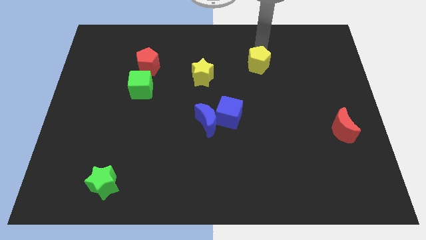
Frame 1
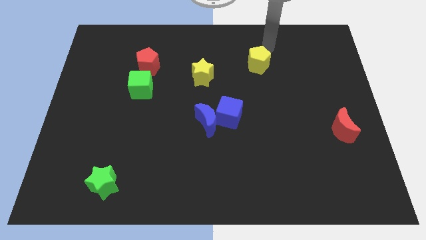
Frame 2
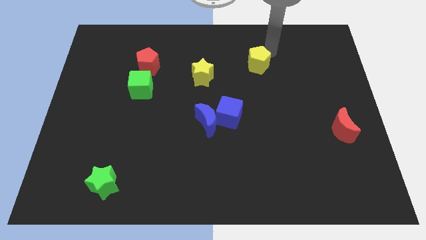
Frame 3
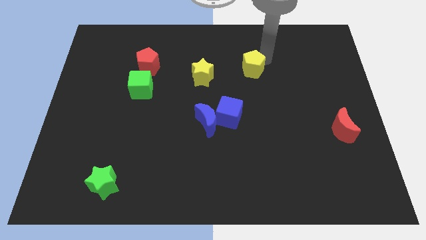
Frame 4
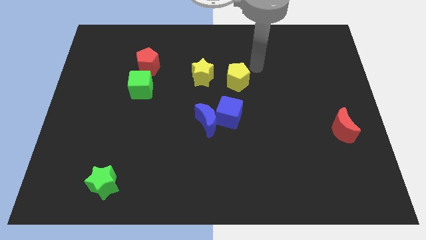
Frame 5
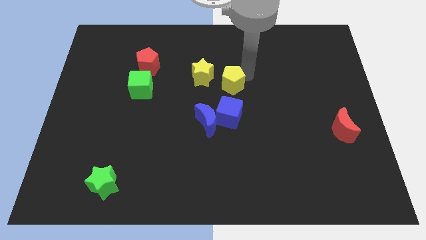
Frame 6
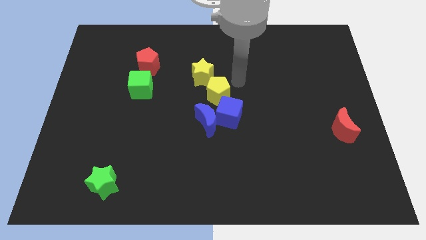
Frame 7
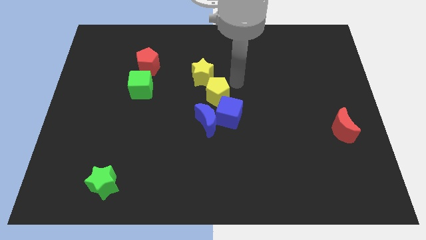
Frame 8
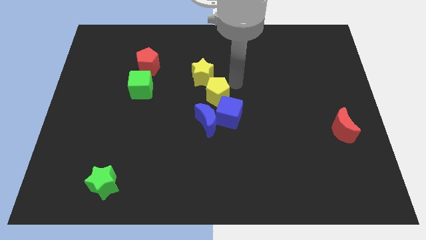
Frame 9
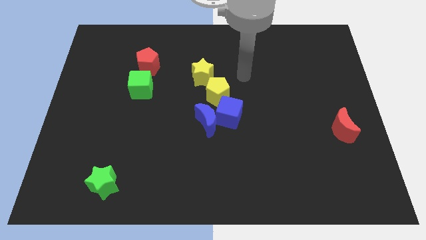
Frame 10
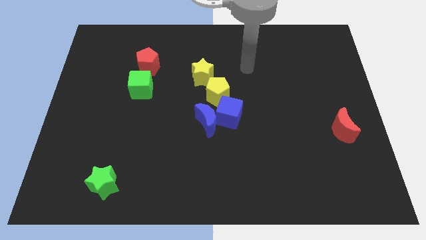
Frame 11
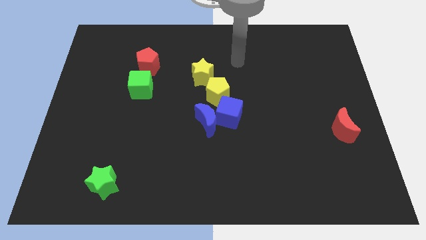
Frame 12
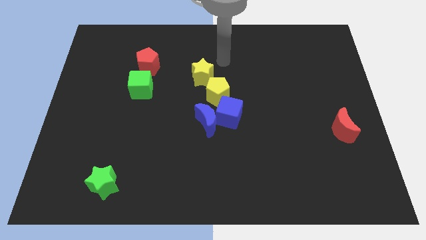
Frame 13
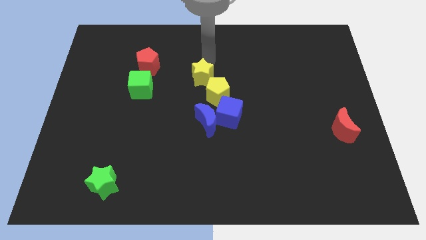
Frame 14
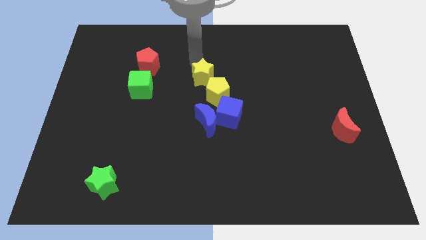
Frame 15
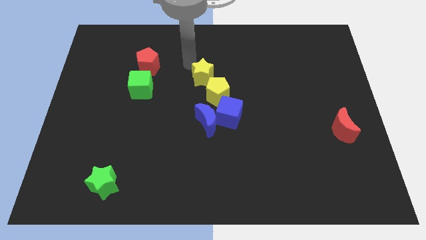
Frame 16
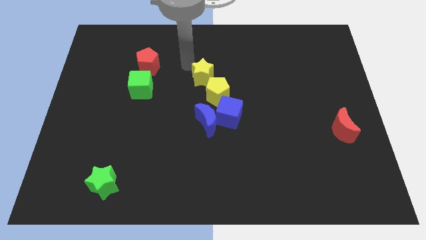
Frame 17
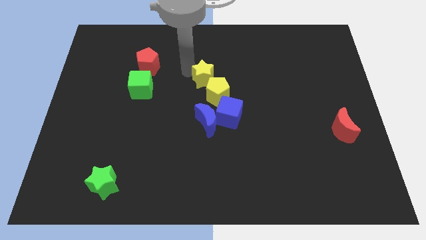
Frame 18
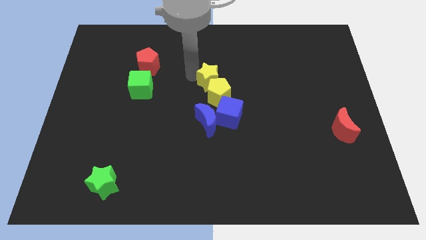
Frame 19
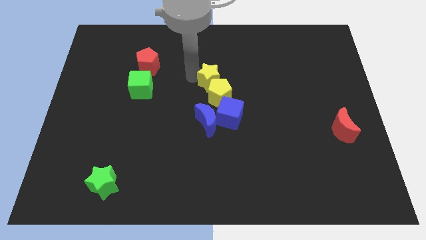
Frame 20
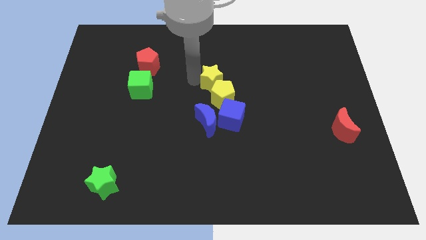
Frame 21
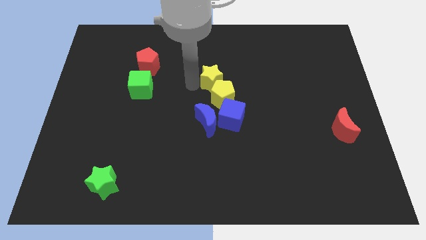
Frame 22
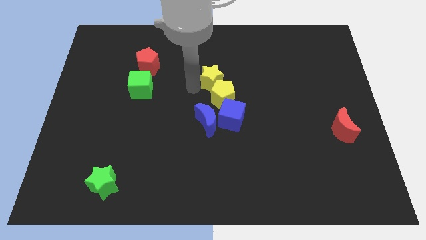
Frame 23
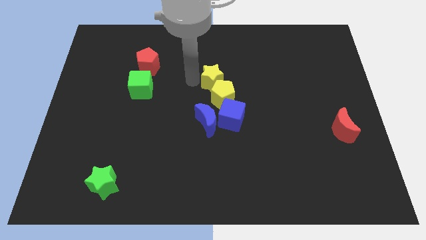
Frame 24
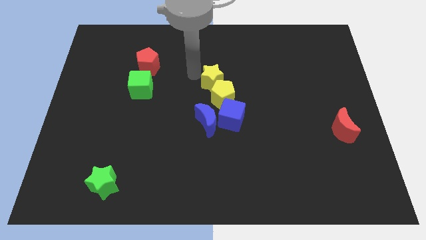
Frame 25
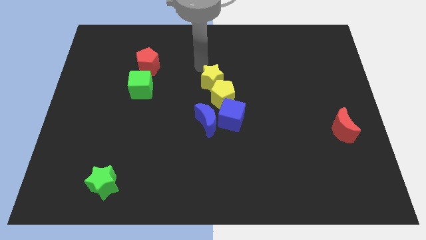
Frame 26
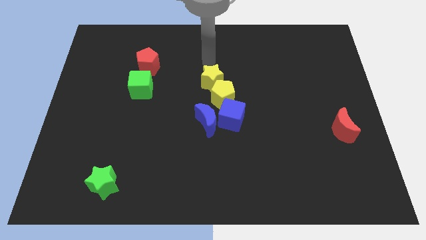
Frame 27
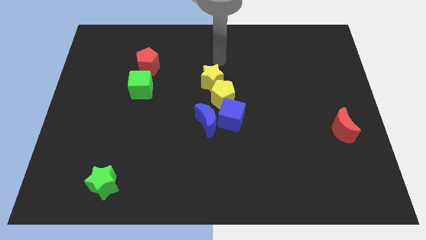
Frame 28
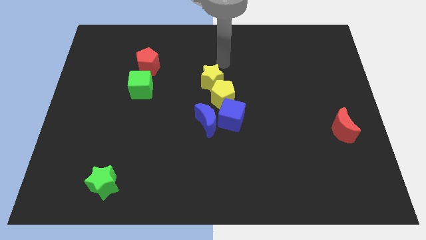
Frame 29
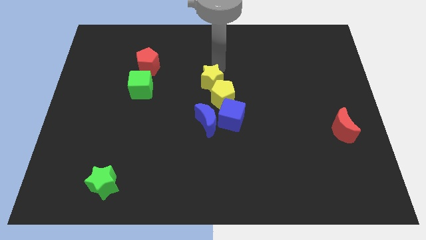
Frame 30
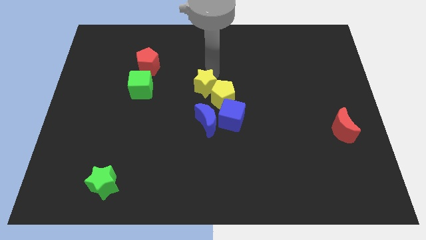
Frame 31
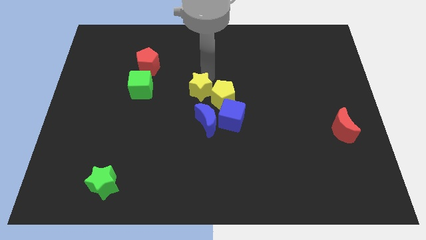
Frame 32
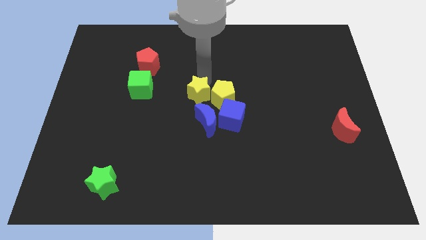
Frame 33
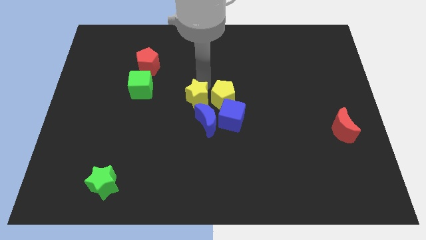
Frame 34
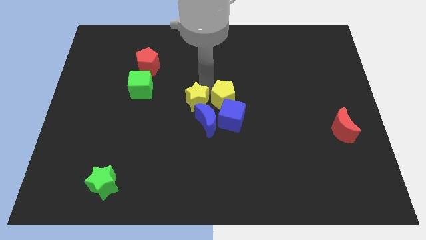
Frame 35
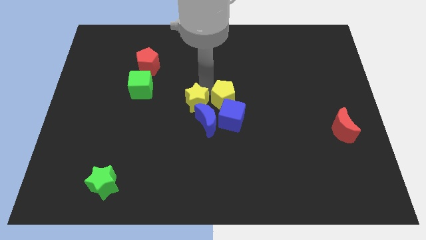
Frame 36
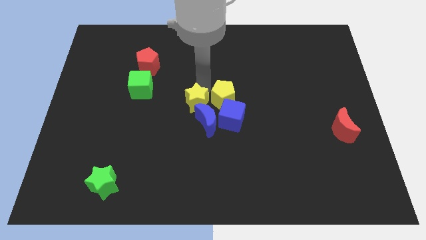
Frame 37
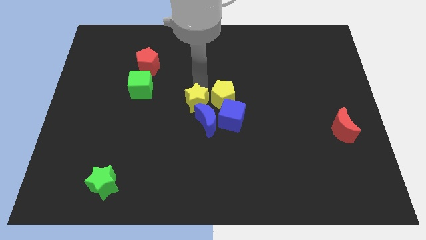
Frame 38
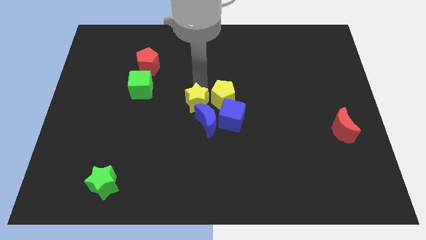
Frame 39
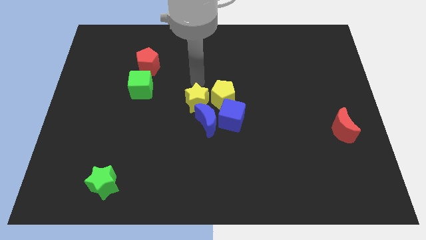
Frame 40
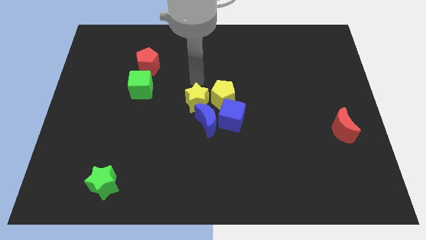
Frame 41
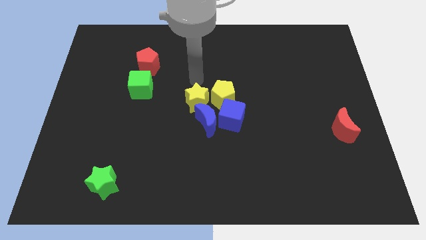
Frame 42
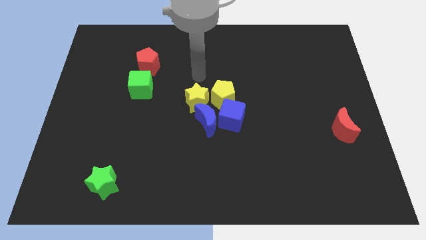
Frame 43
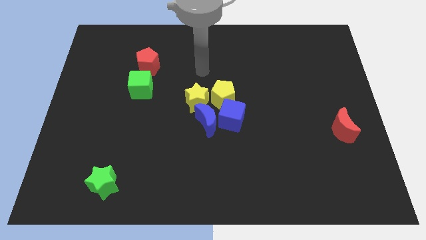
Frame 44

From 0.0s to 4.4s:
place the yellow star to the left of the yellow pentagon

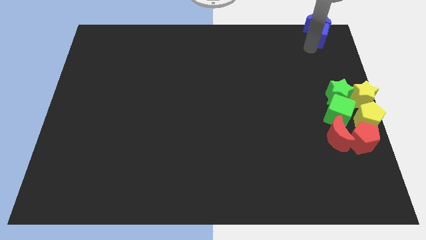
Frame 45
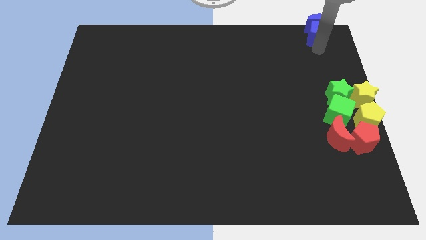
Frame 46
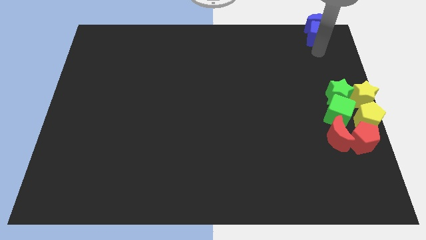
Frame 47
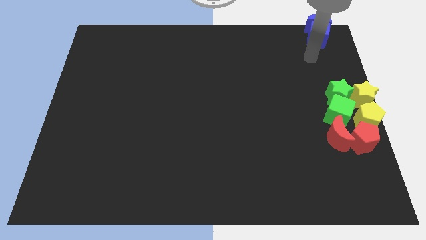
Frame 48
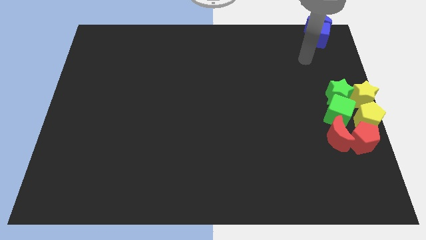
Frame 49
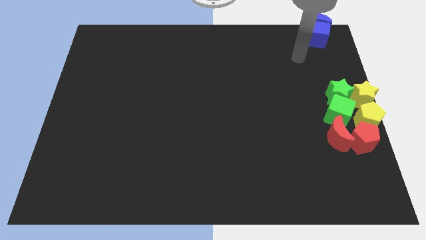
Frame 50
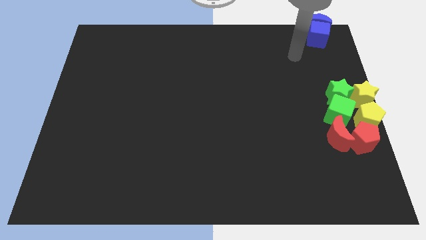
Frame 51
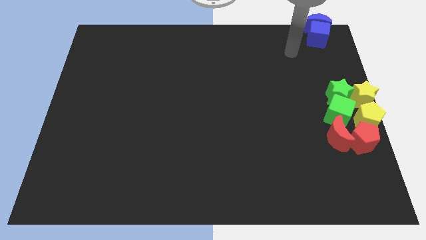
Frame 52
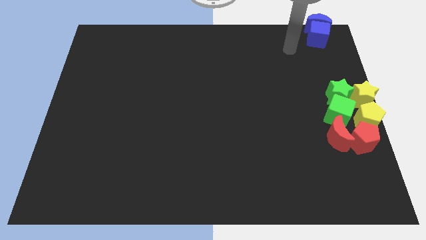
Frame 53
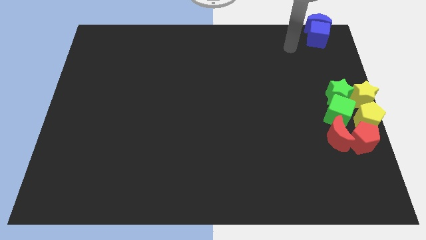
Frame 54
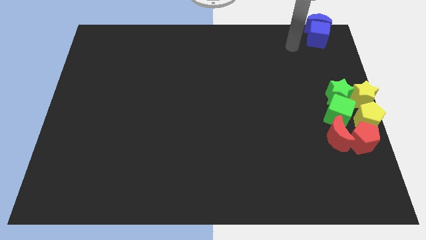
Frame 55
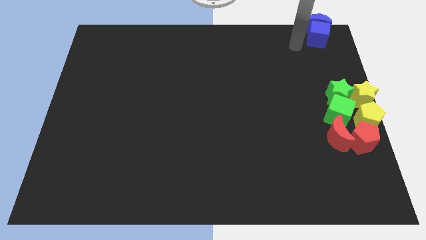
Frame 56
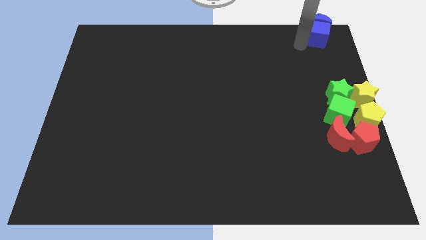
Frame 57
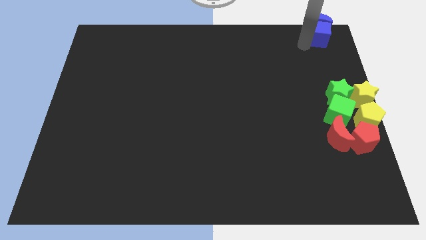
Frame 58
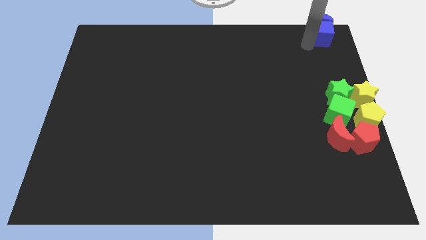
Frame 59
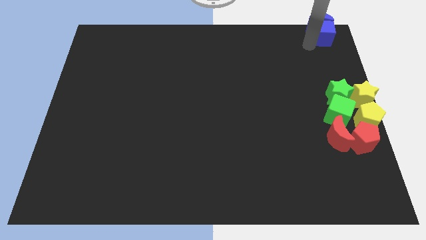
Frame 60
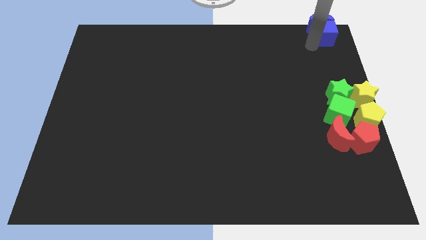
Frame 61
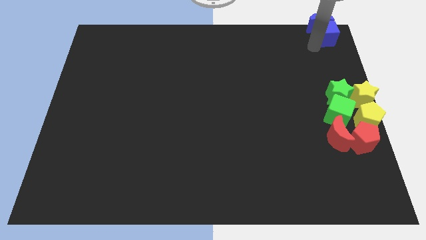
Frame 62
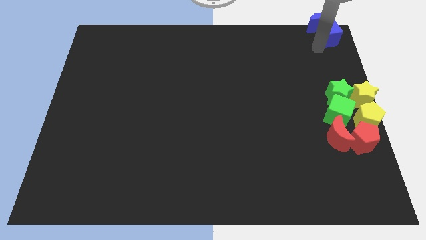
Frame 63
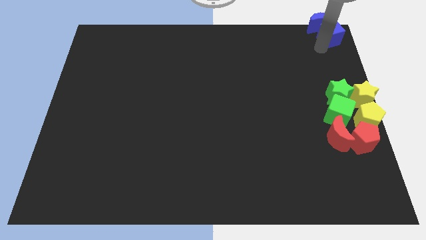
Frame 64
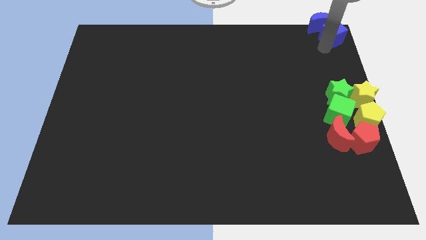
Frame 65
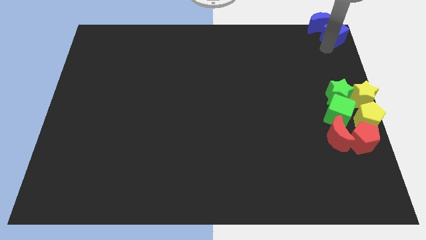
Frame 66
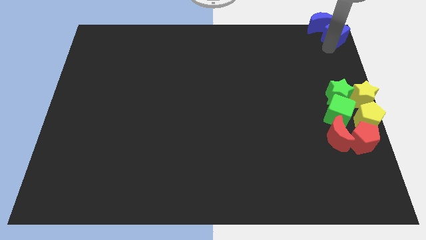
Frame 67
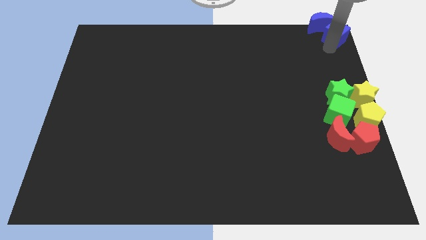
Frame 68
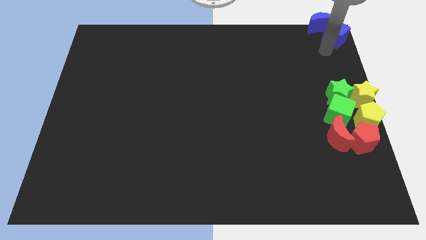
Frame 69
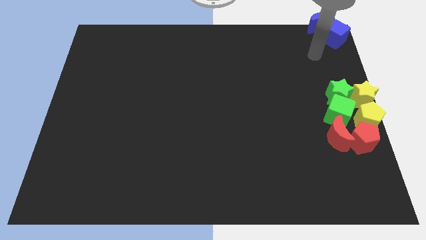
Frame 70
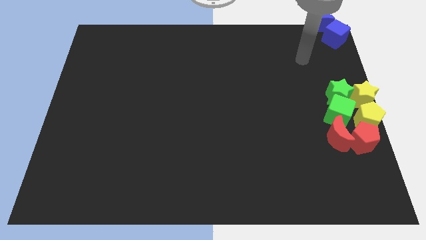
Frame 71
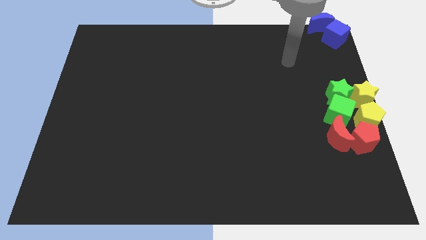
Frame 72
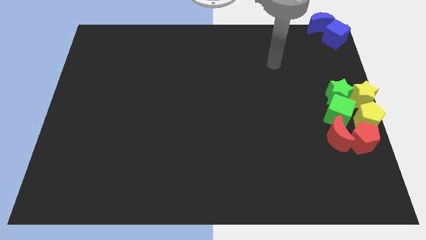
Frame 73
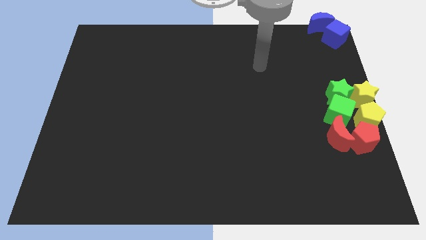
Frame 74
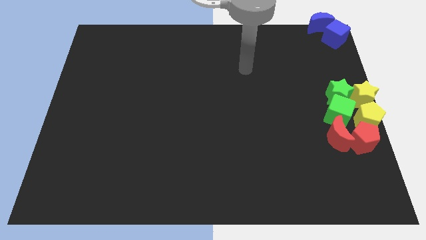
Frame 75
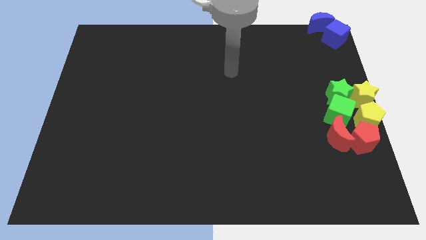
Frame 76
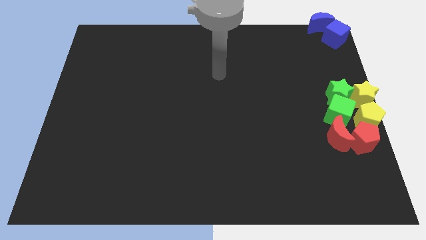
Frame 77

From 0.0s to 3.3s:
slide blue cube to the top right corner

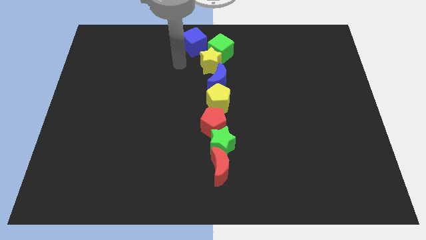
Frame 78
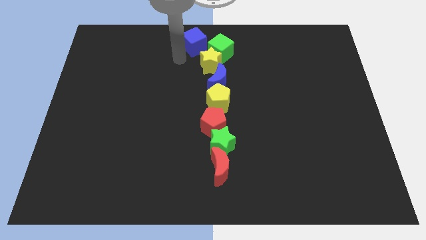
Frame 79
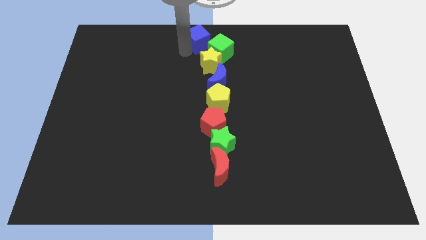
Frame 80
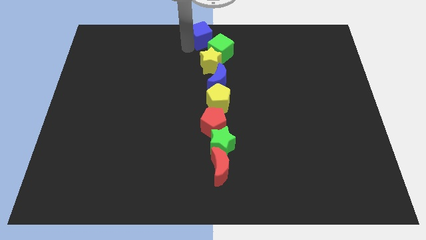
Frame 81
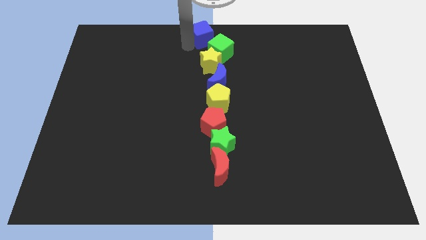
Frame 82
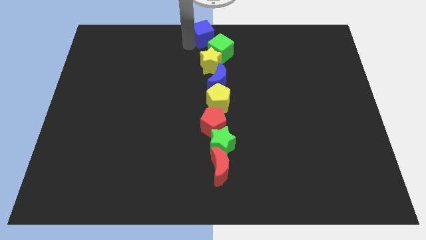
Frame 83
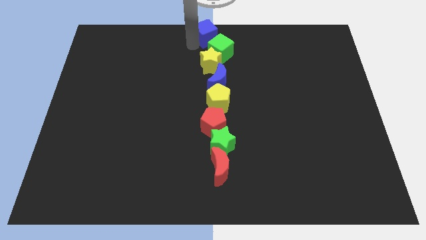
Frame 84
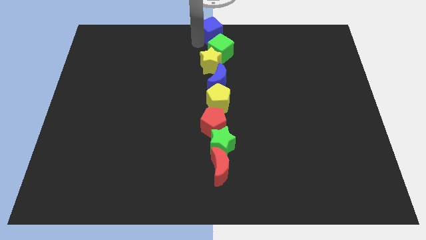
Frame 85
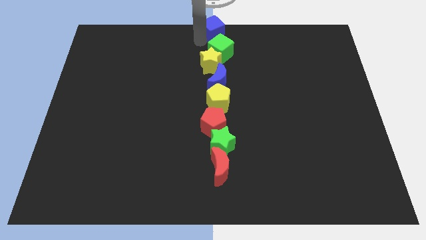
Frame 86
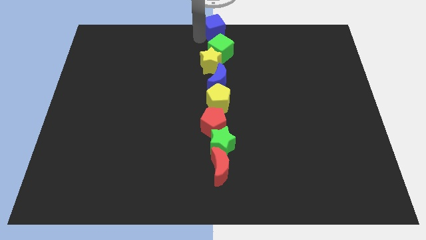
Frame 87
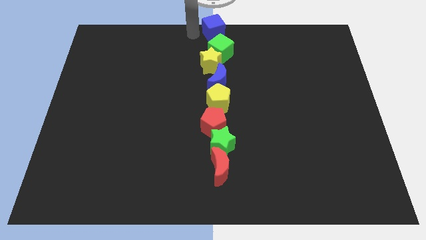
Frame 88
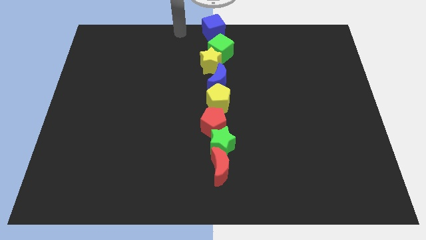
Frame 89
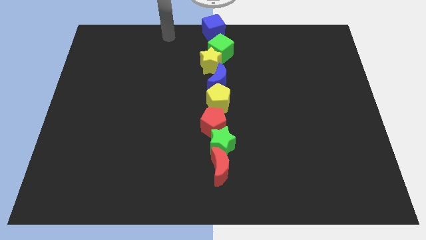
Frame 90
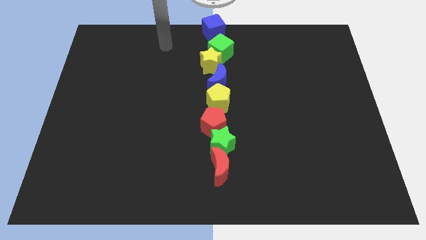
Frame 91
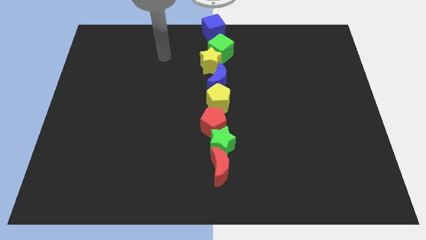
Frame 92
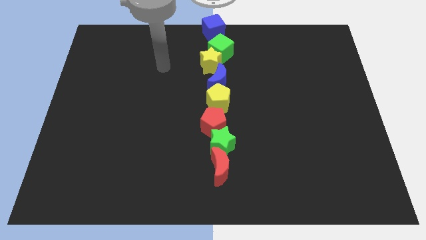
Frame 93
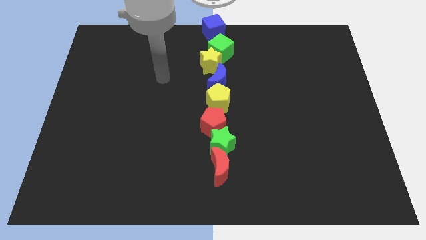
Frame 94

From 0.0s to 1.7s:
place the blue cube above the green cube
